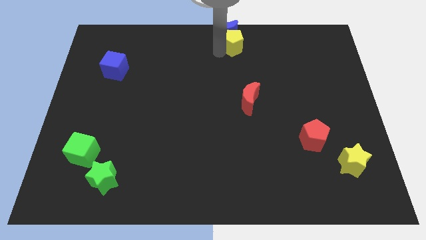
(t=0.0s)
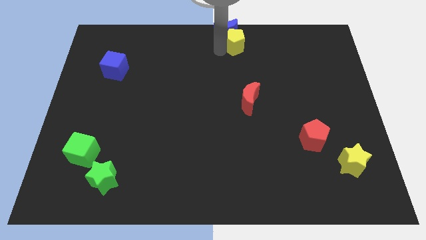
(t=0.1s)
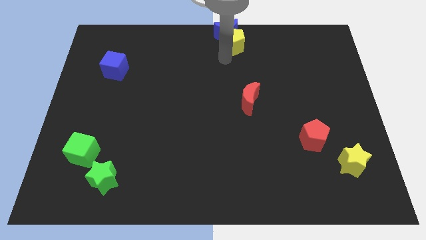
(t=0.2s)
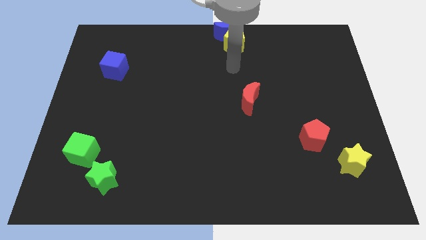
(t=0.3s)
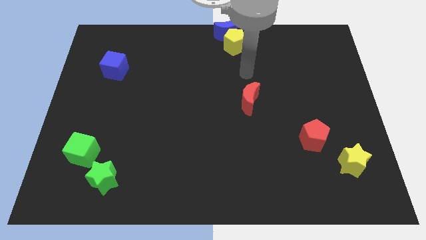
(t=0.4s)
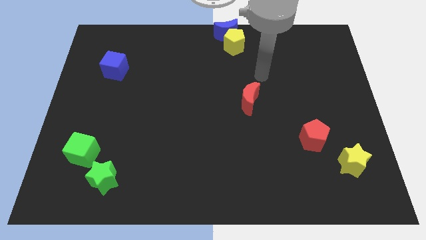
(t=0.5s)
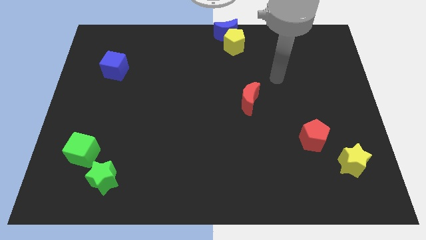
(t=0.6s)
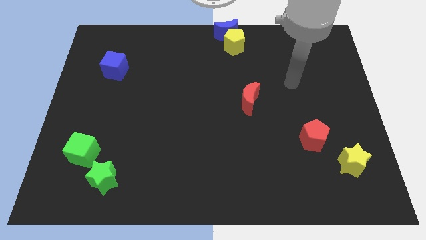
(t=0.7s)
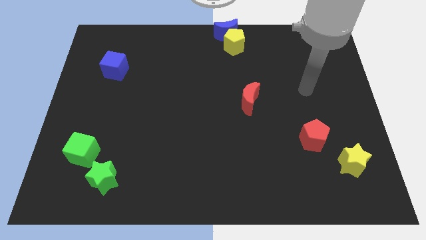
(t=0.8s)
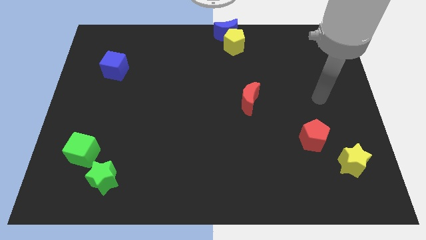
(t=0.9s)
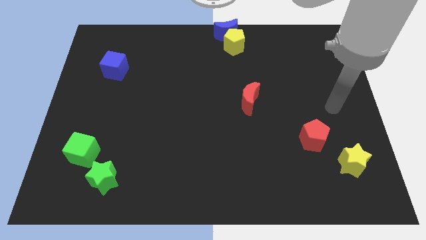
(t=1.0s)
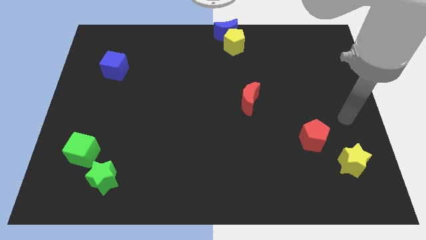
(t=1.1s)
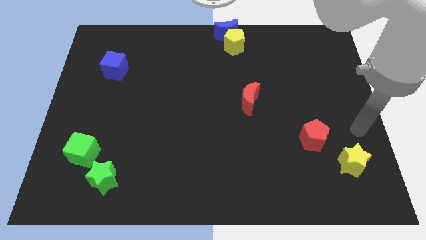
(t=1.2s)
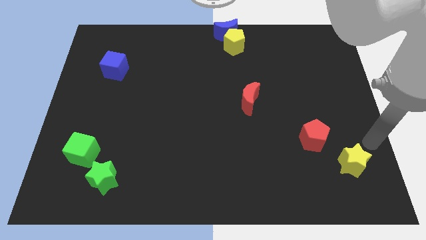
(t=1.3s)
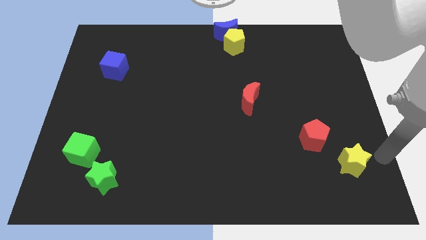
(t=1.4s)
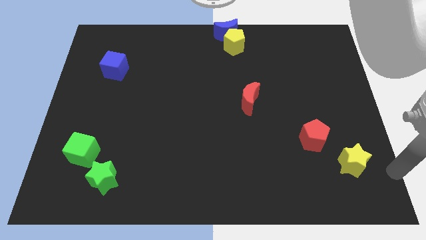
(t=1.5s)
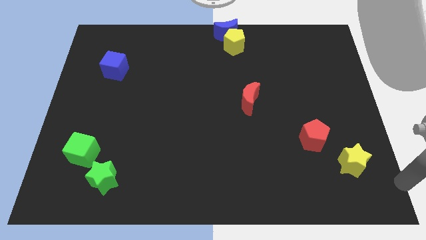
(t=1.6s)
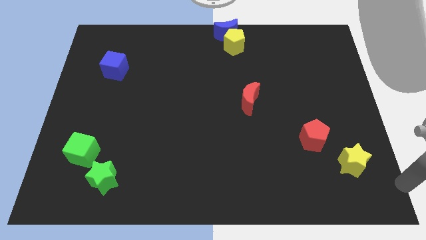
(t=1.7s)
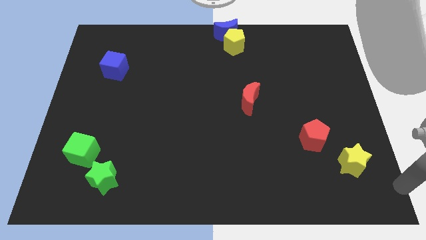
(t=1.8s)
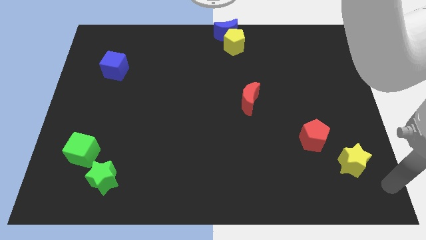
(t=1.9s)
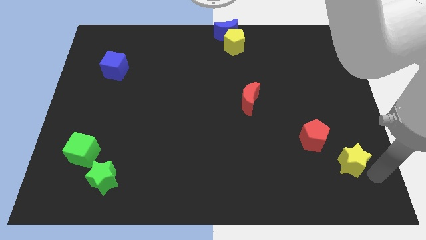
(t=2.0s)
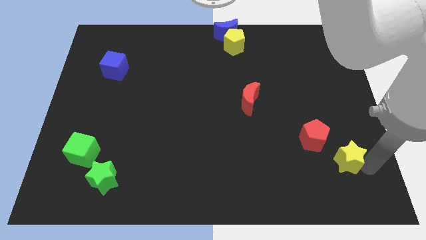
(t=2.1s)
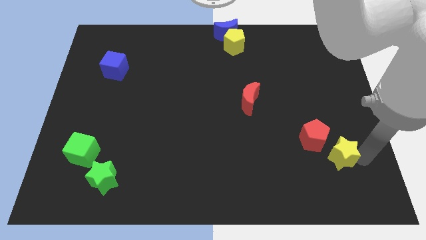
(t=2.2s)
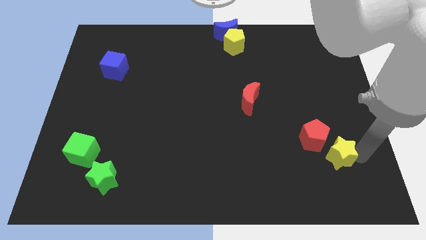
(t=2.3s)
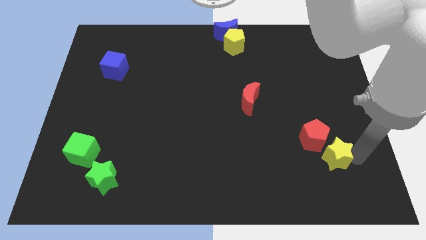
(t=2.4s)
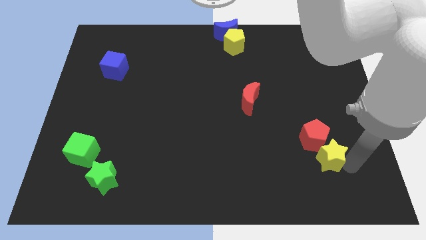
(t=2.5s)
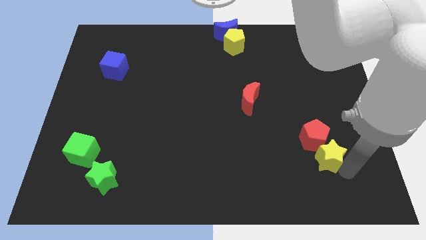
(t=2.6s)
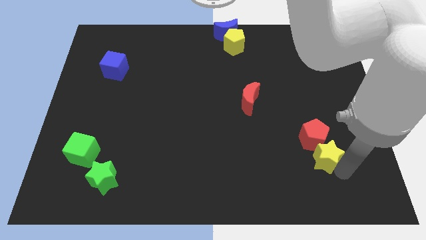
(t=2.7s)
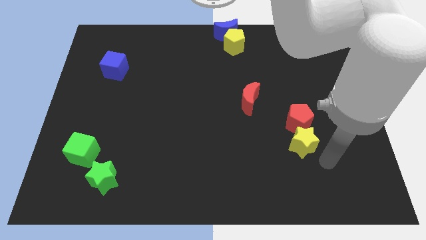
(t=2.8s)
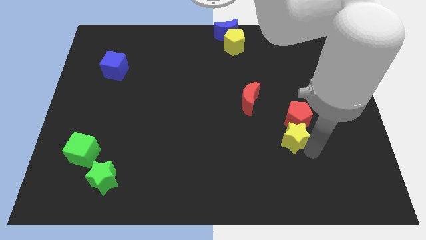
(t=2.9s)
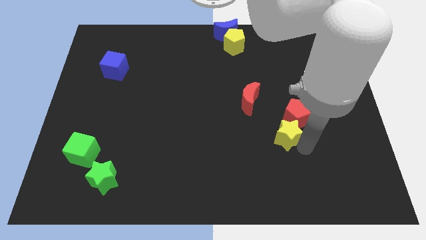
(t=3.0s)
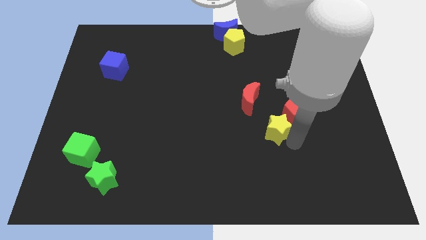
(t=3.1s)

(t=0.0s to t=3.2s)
push the yellow star into red pentagon

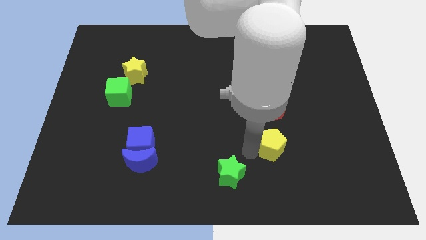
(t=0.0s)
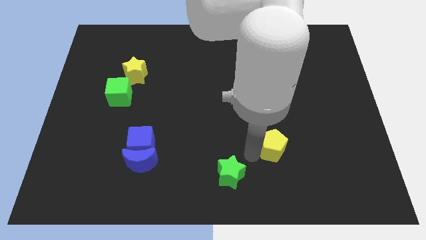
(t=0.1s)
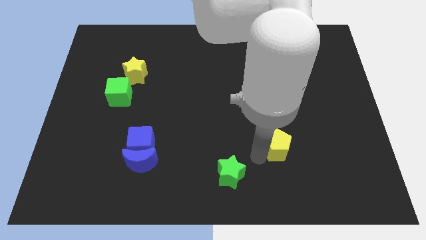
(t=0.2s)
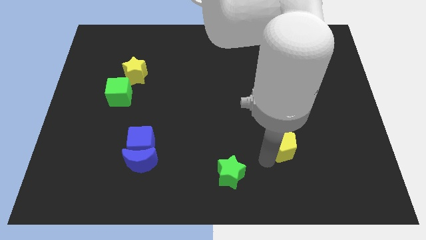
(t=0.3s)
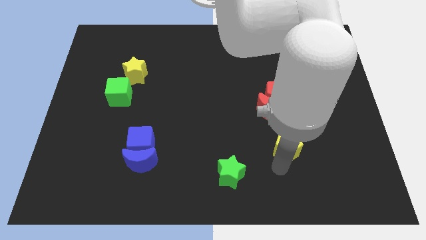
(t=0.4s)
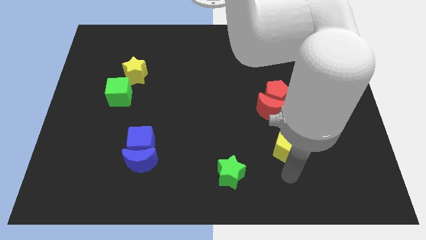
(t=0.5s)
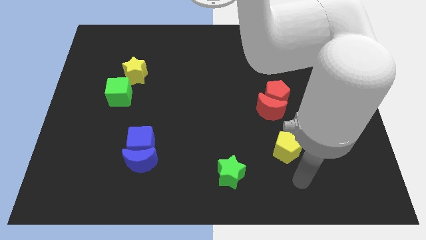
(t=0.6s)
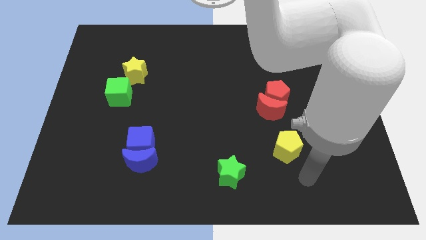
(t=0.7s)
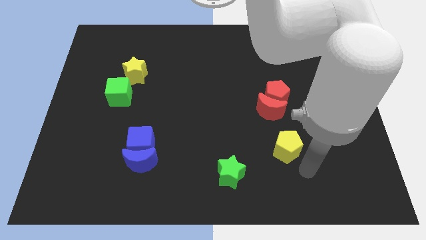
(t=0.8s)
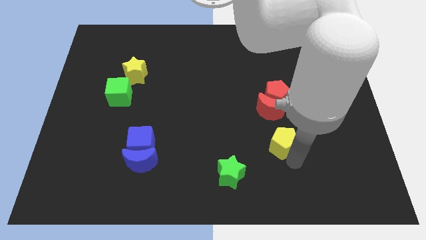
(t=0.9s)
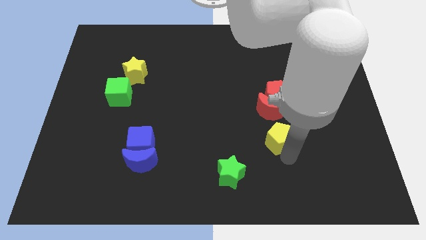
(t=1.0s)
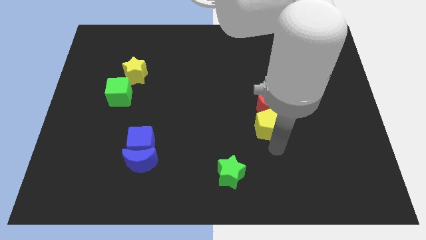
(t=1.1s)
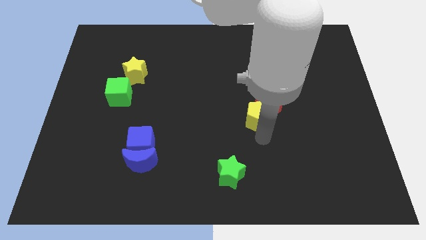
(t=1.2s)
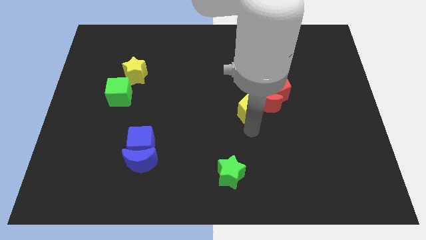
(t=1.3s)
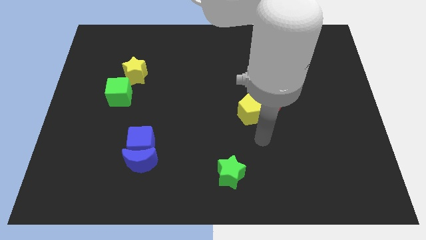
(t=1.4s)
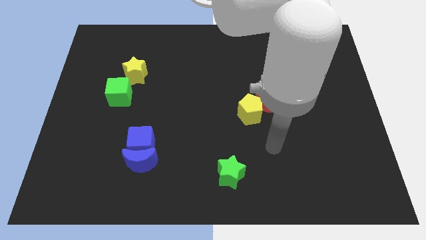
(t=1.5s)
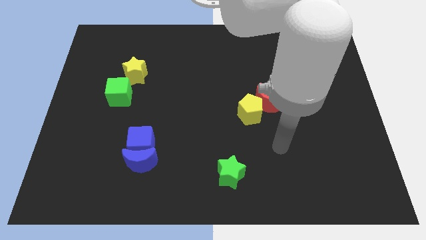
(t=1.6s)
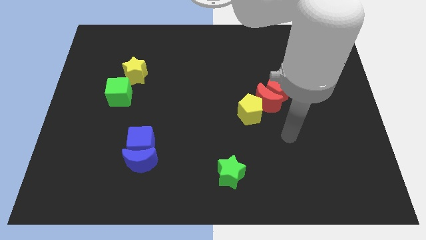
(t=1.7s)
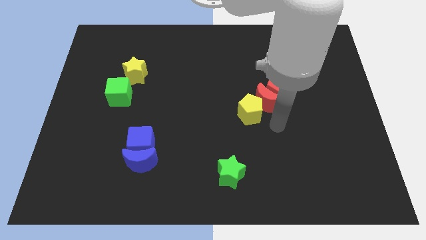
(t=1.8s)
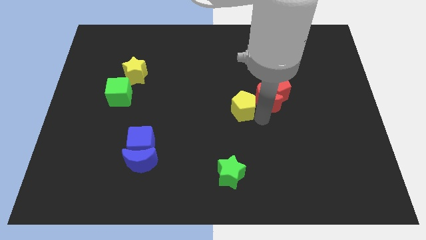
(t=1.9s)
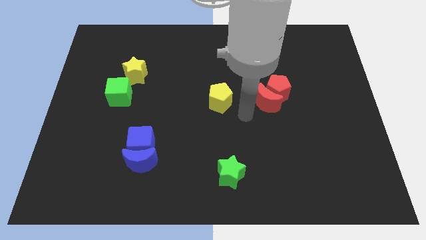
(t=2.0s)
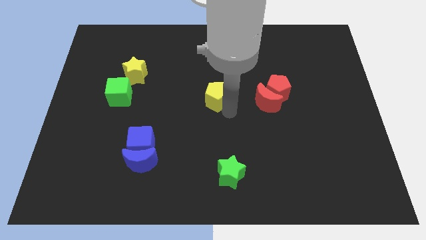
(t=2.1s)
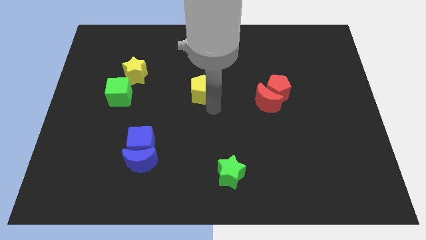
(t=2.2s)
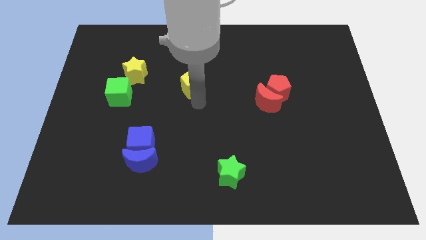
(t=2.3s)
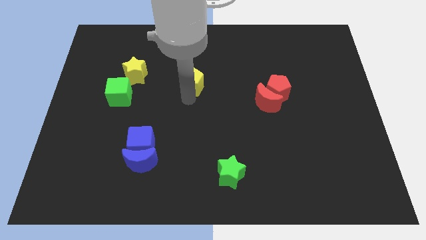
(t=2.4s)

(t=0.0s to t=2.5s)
place the yellow pentagon diagonally top right to the blue cube

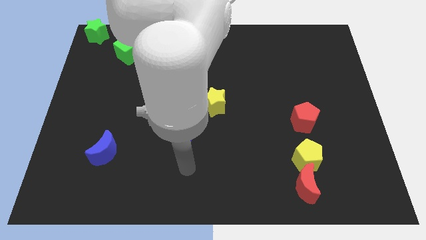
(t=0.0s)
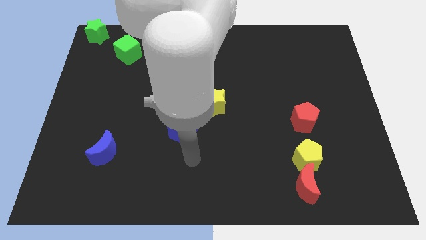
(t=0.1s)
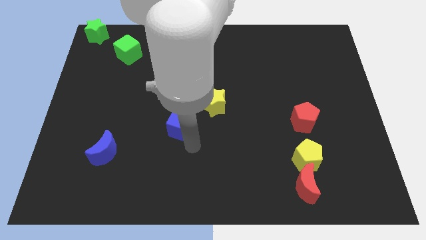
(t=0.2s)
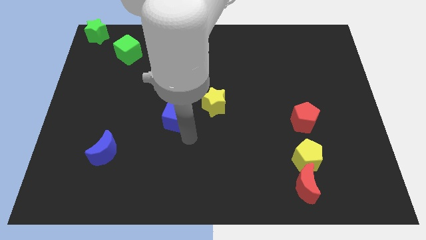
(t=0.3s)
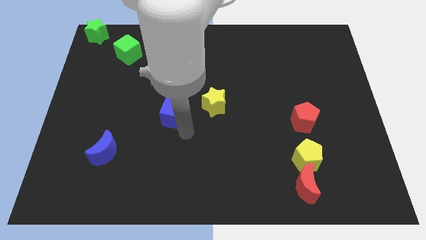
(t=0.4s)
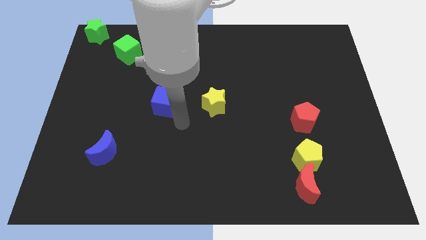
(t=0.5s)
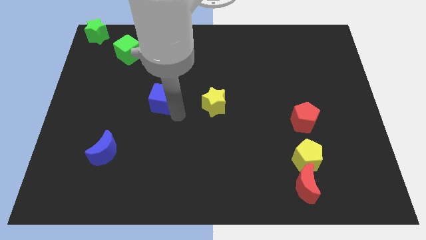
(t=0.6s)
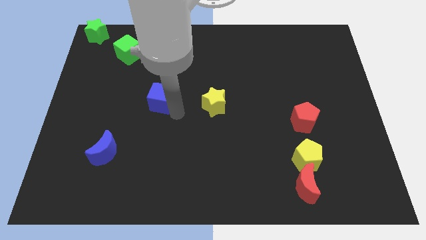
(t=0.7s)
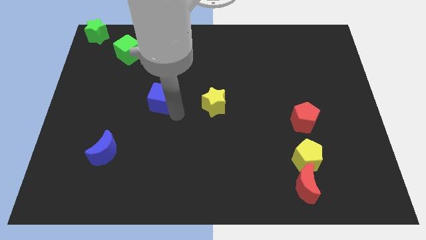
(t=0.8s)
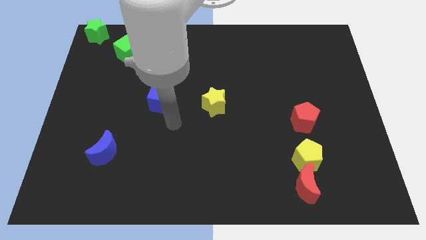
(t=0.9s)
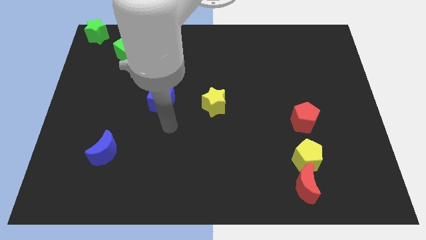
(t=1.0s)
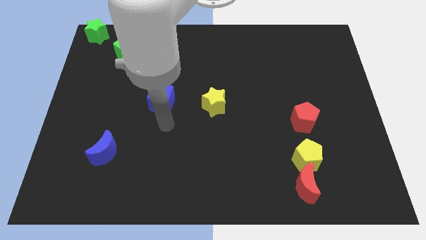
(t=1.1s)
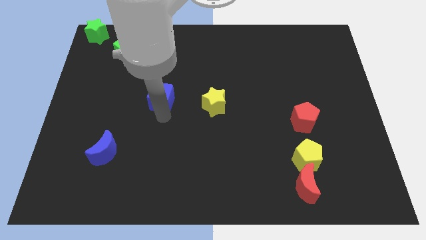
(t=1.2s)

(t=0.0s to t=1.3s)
move the blue cube to the left of the yellow star

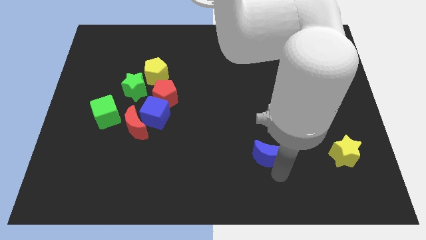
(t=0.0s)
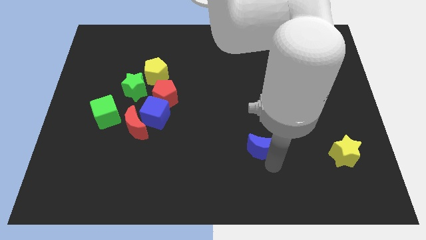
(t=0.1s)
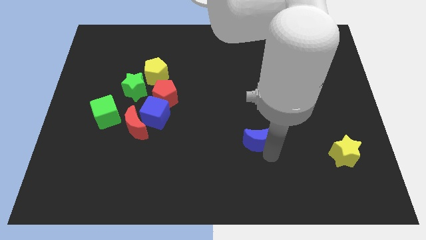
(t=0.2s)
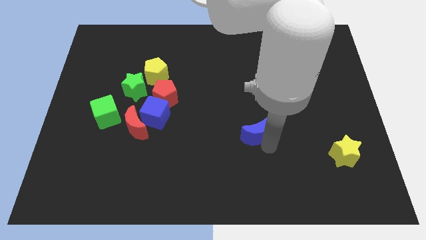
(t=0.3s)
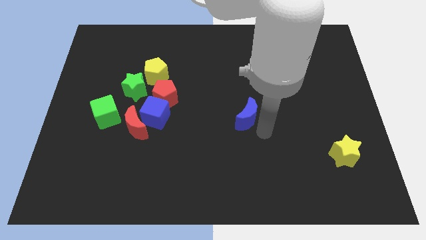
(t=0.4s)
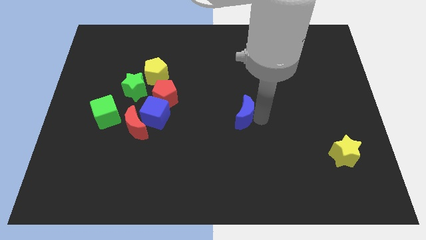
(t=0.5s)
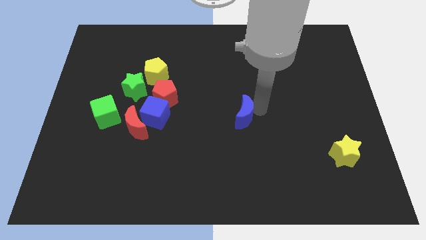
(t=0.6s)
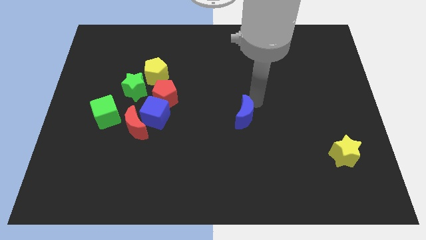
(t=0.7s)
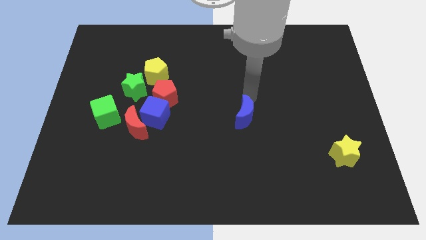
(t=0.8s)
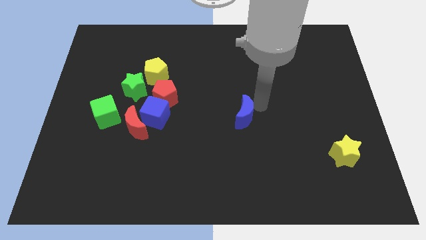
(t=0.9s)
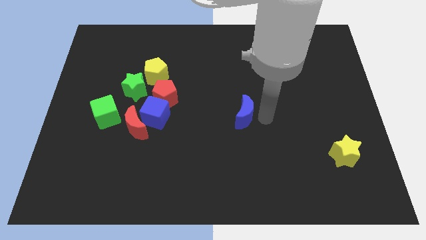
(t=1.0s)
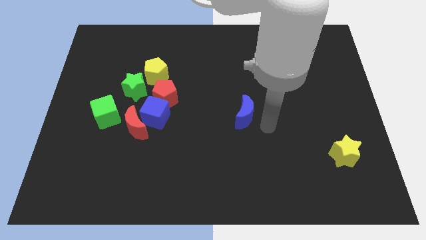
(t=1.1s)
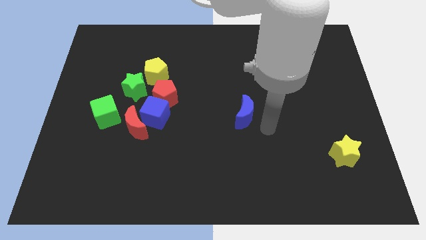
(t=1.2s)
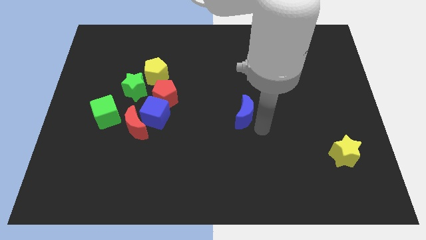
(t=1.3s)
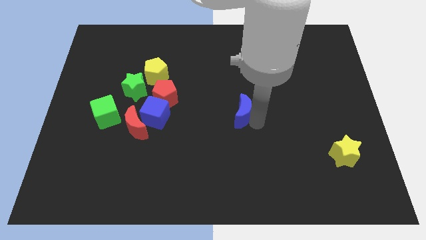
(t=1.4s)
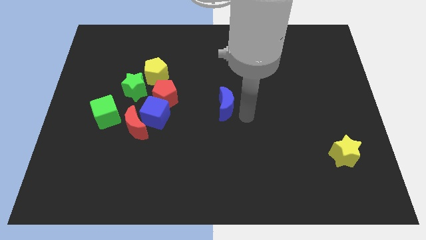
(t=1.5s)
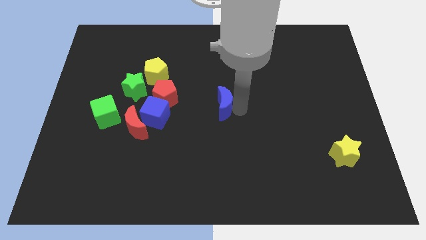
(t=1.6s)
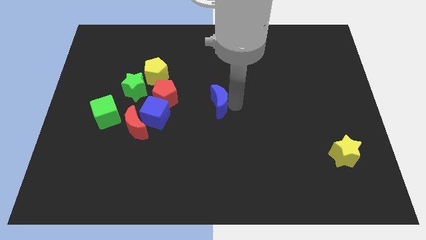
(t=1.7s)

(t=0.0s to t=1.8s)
move the blue crescent towards the group of blocks
